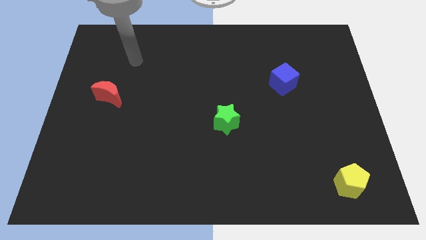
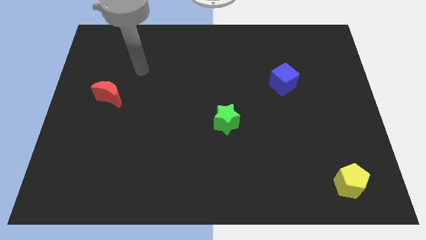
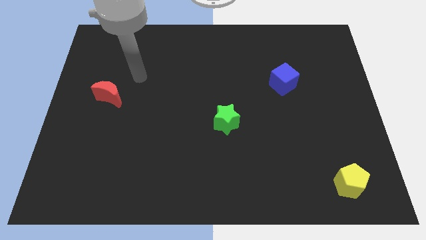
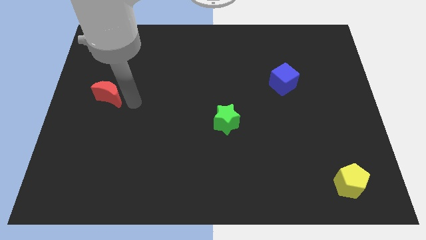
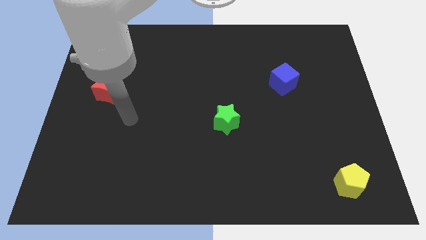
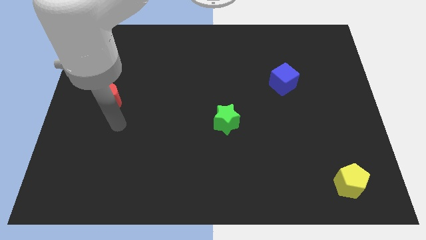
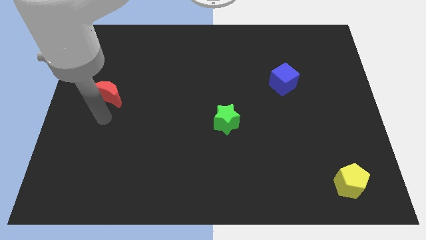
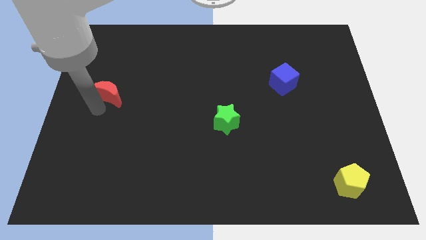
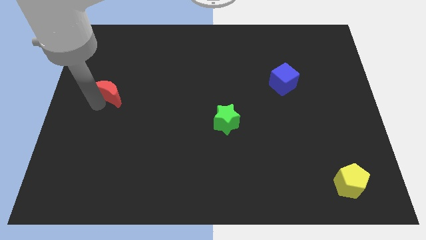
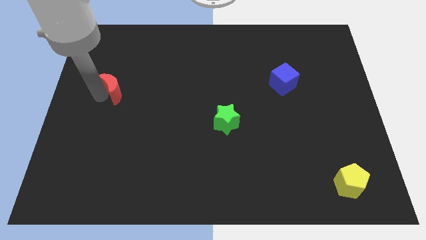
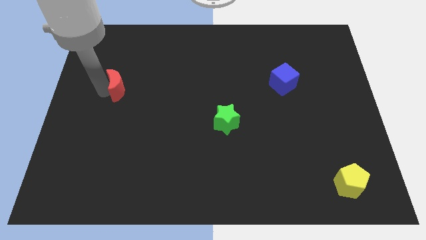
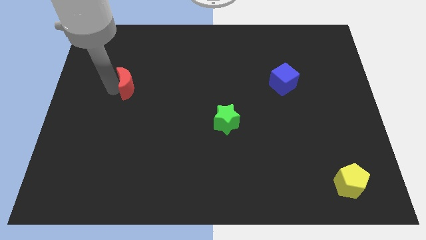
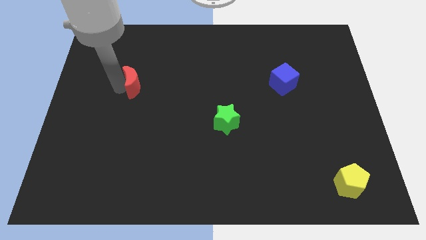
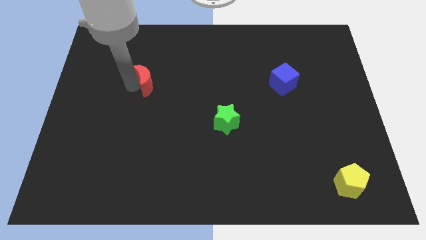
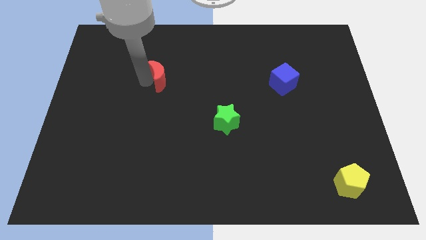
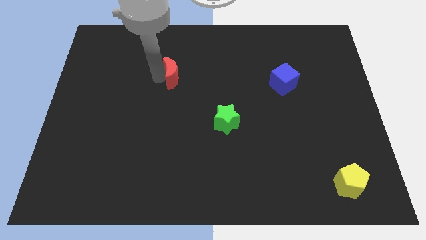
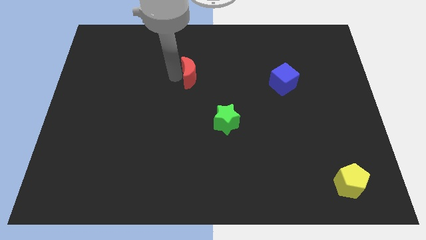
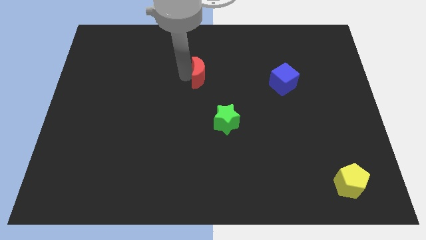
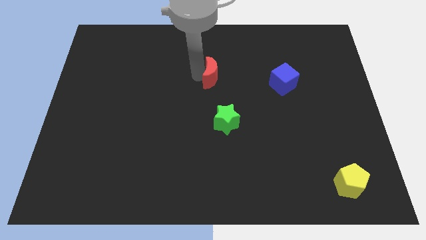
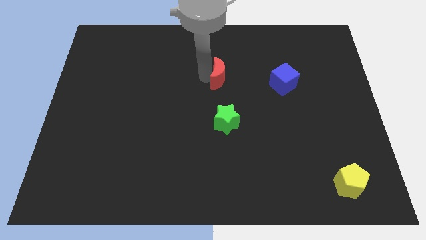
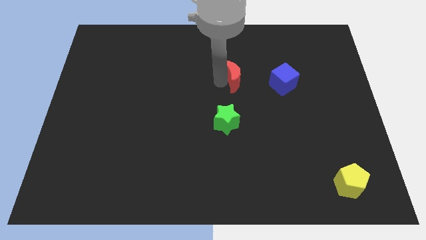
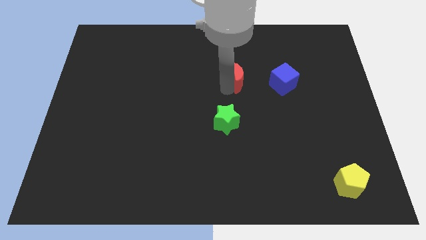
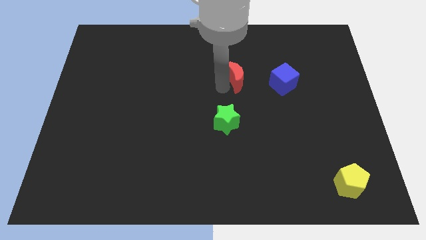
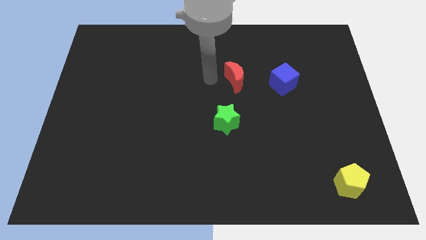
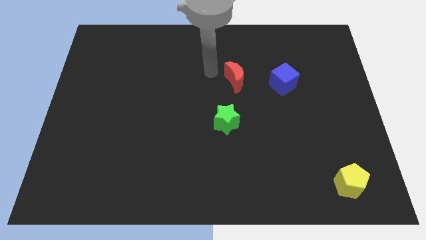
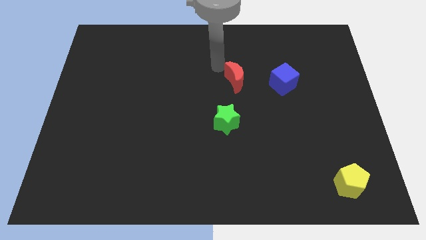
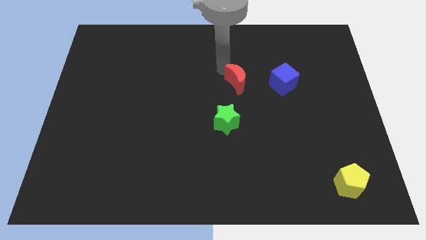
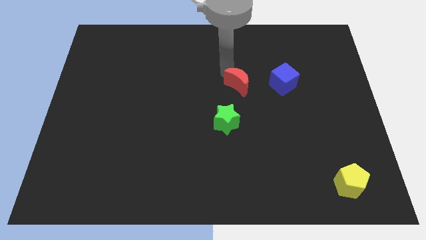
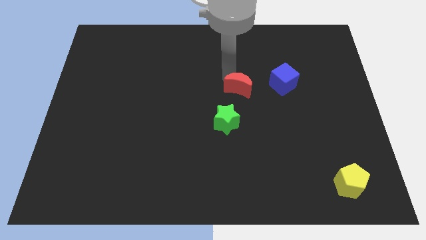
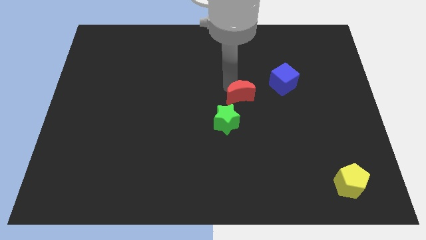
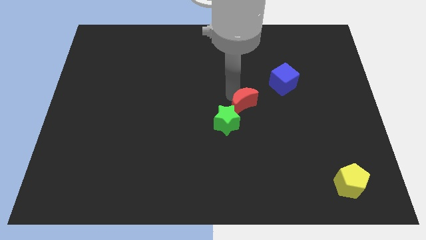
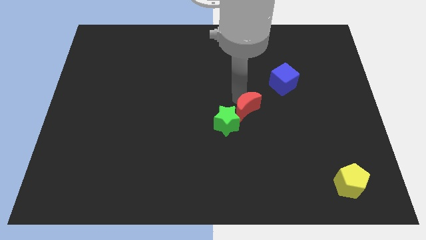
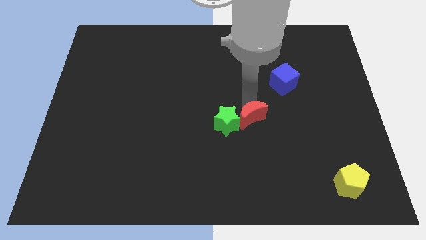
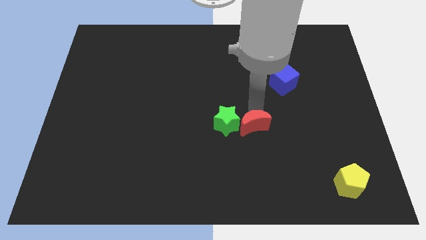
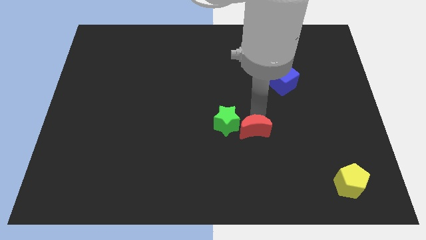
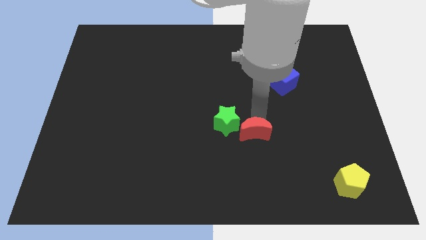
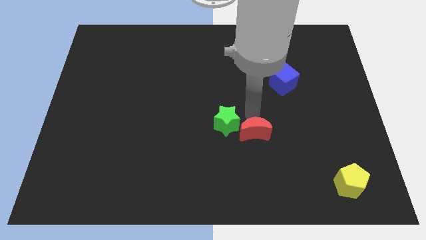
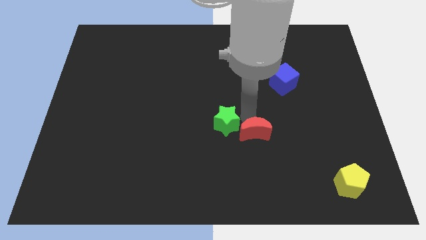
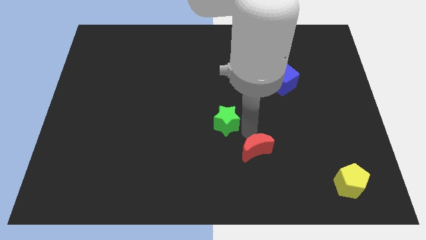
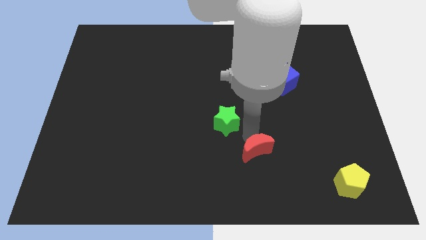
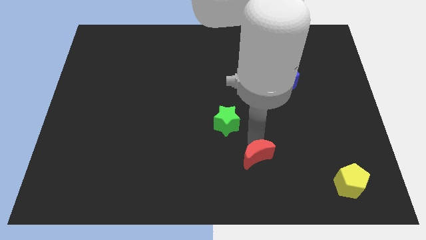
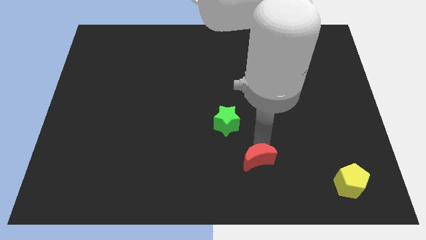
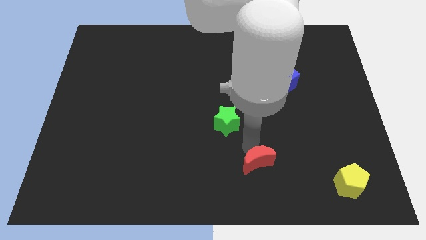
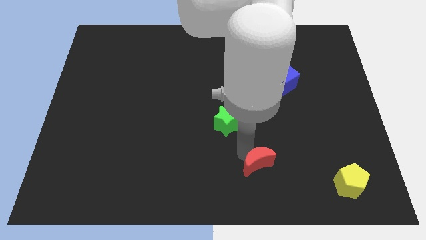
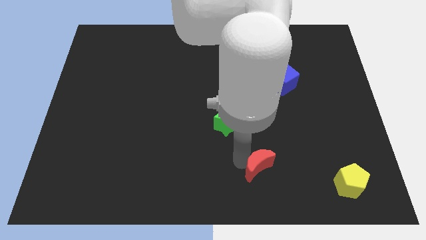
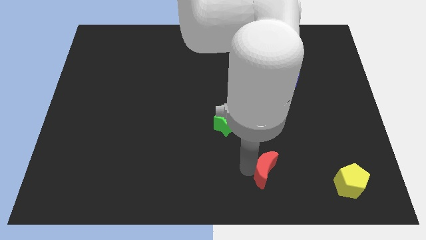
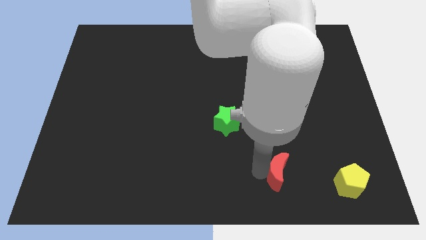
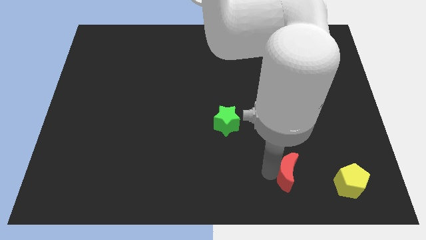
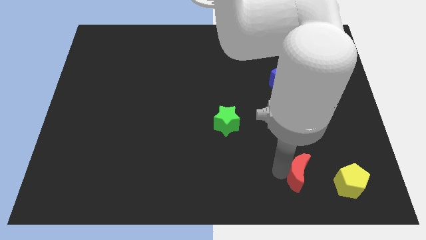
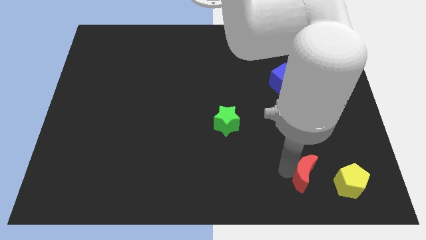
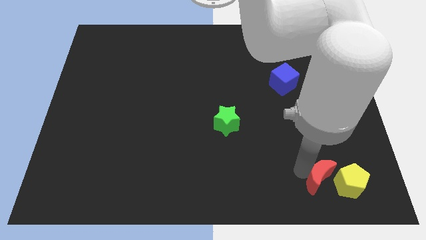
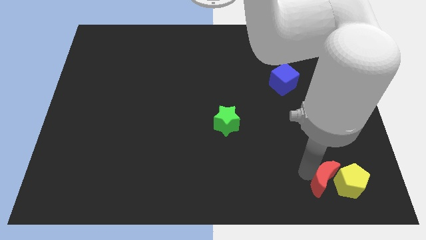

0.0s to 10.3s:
slide the moon close to the pentagon

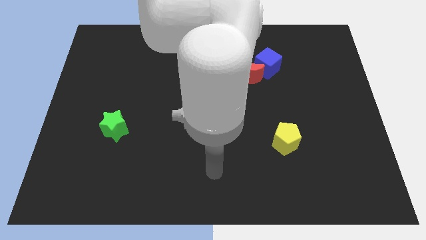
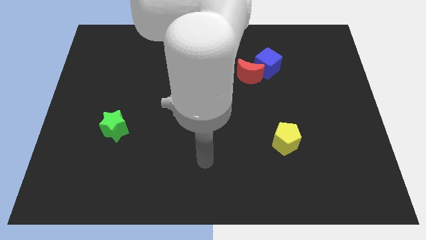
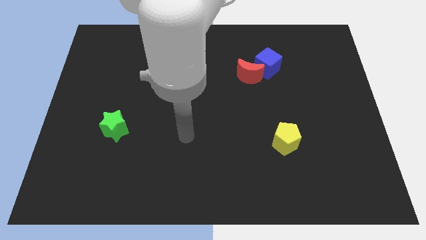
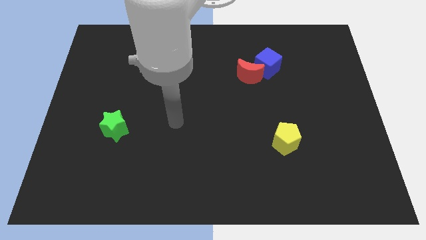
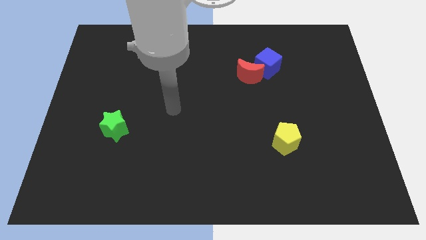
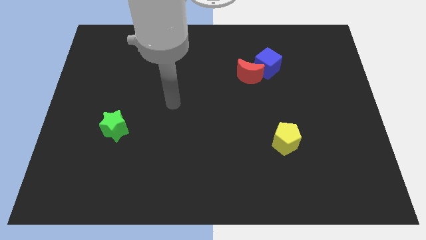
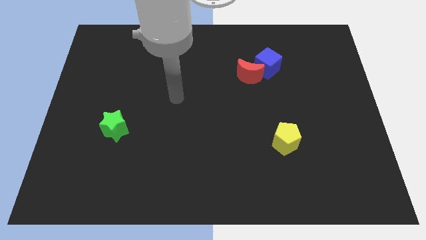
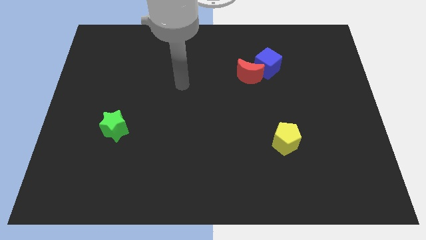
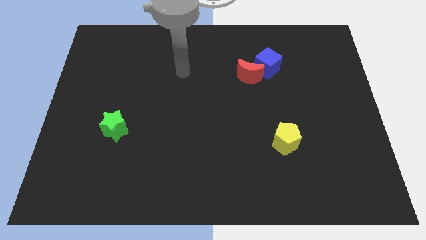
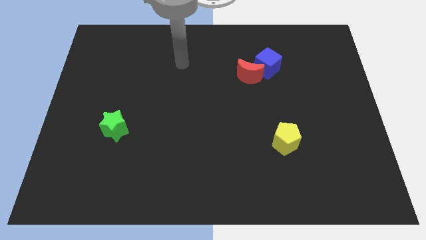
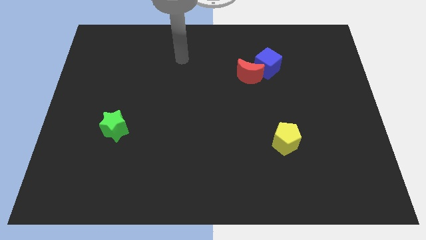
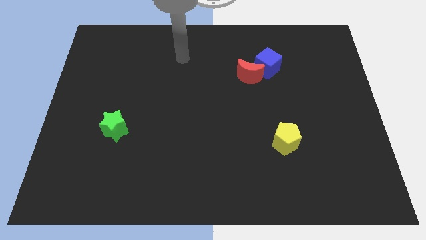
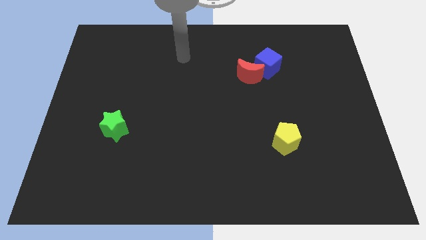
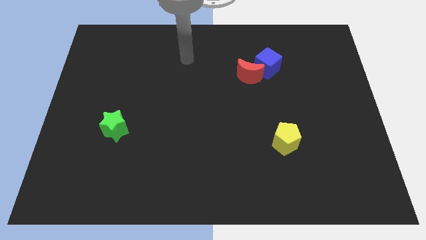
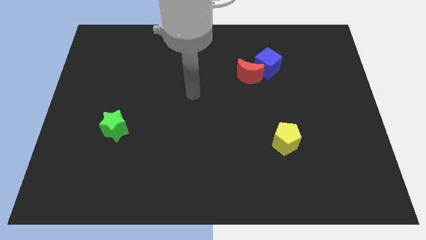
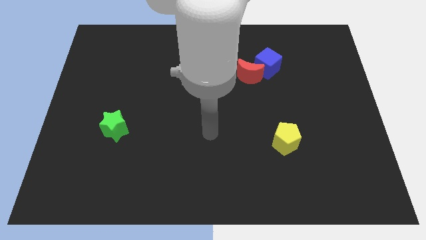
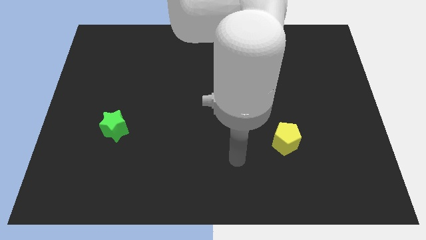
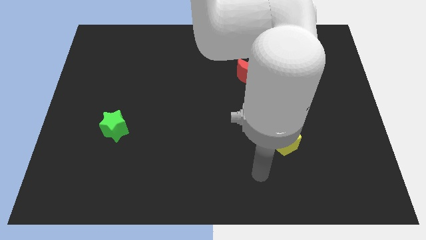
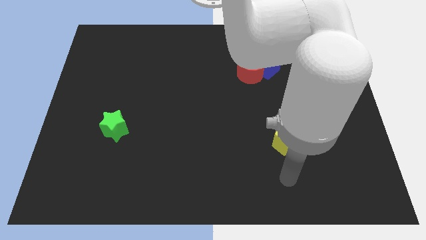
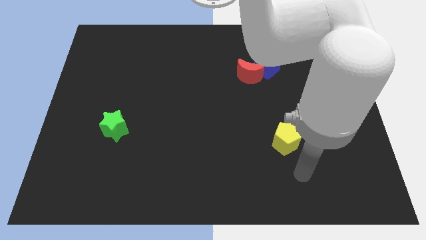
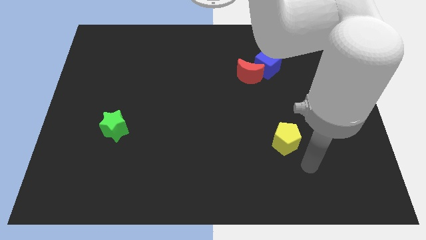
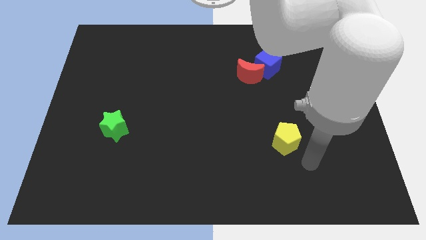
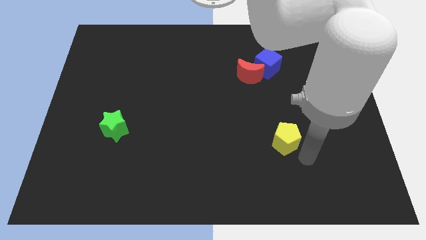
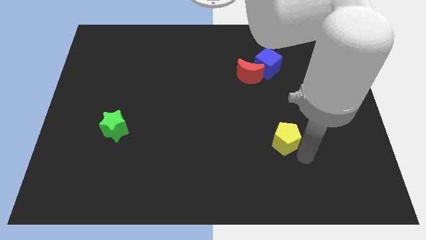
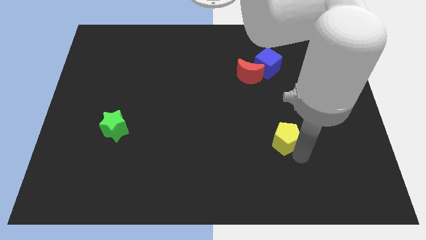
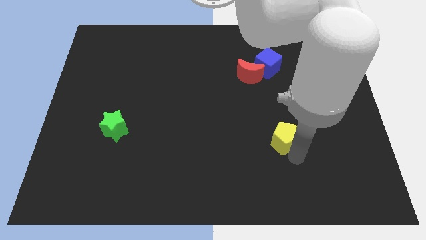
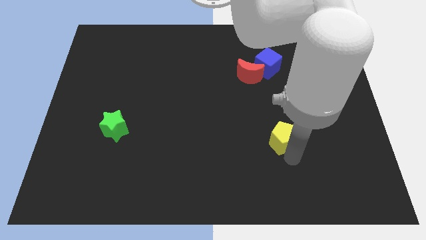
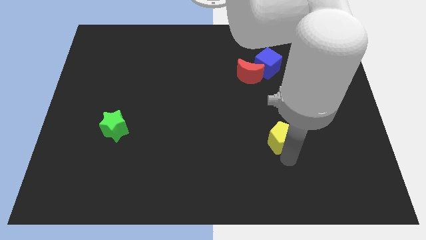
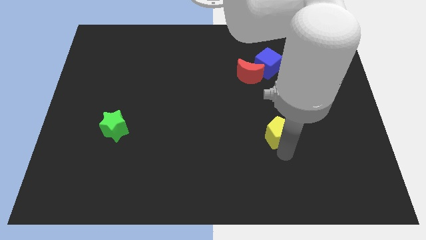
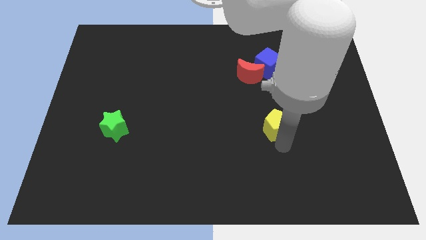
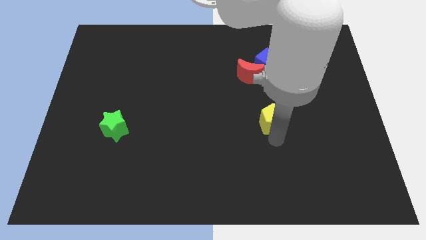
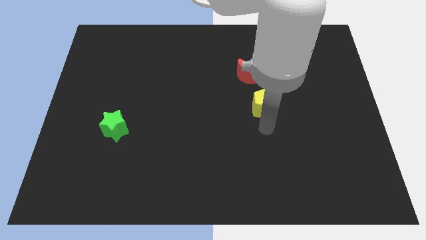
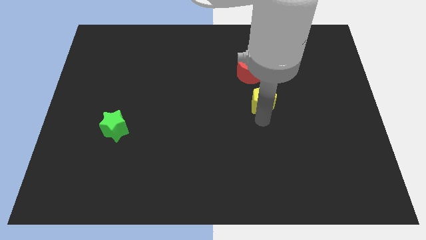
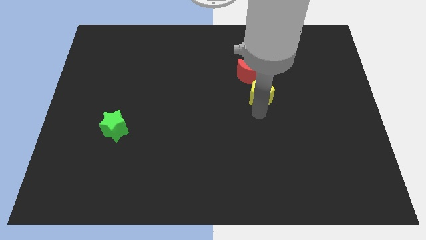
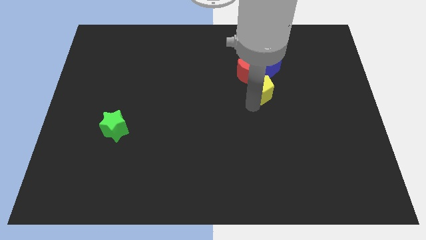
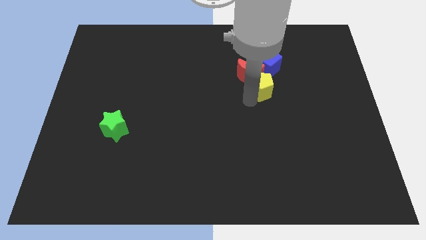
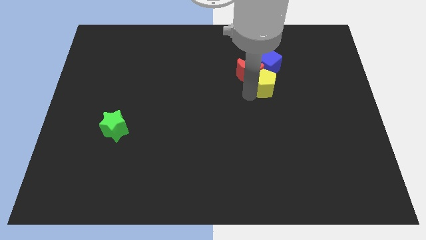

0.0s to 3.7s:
put the yellow pentagon close to the red moon
